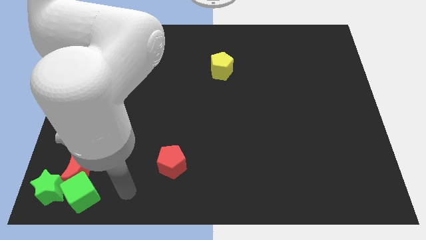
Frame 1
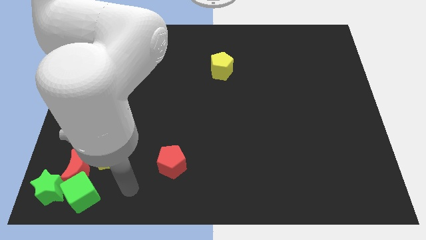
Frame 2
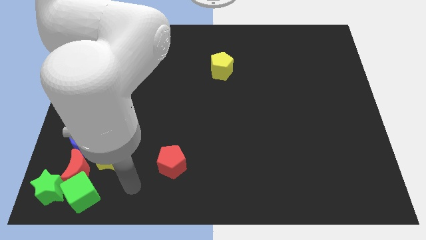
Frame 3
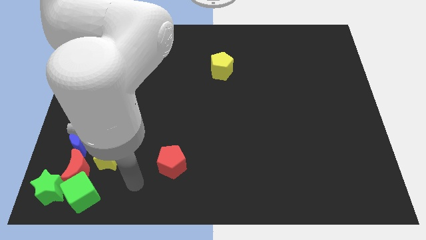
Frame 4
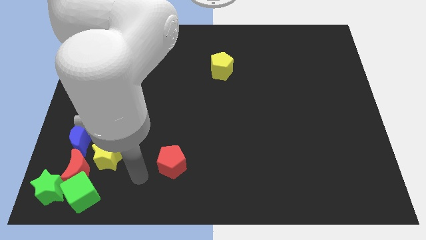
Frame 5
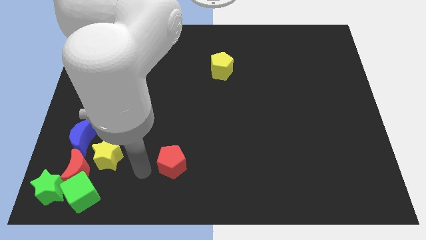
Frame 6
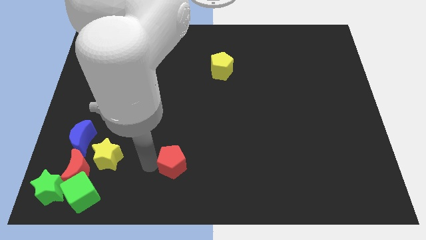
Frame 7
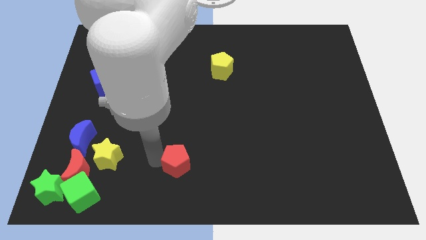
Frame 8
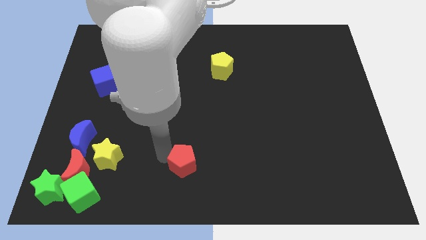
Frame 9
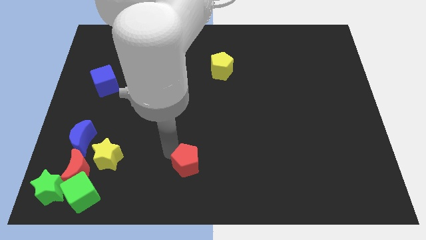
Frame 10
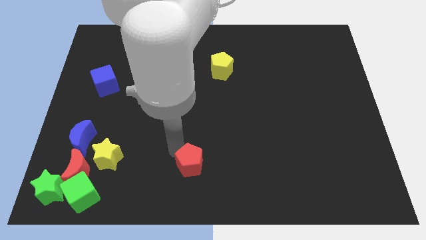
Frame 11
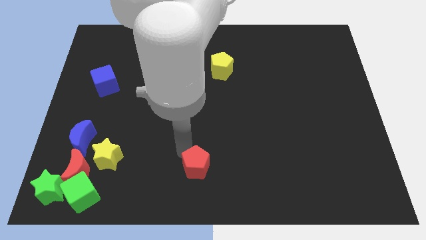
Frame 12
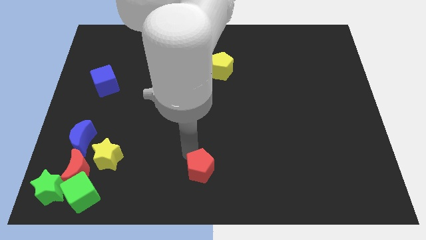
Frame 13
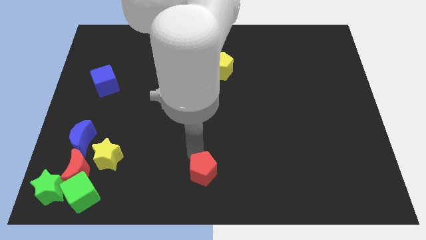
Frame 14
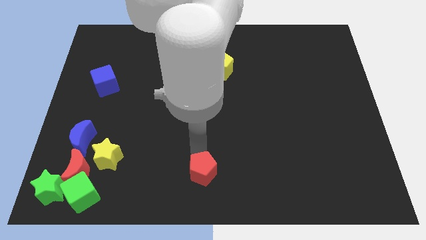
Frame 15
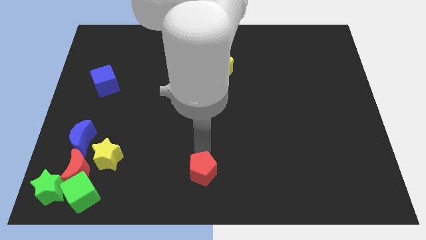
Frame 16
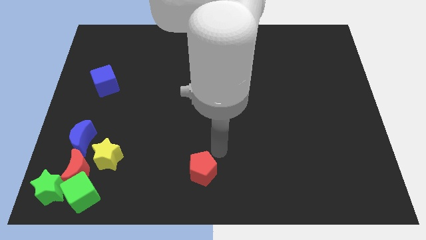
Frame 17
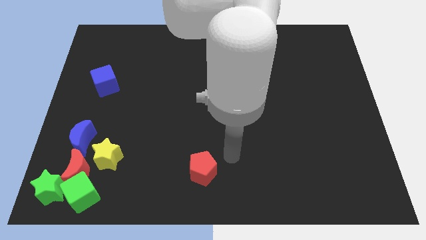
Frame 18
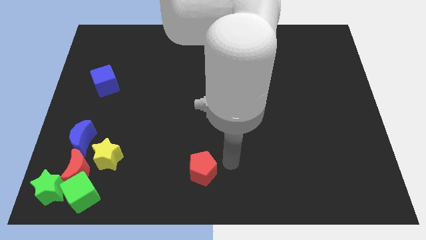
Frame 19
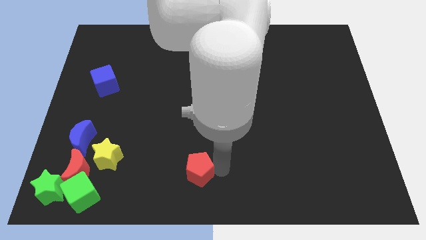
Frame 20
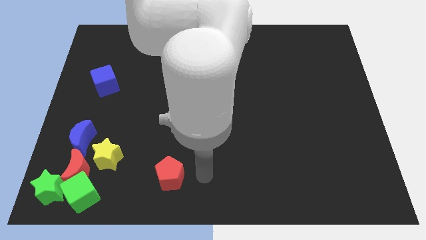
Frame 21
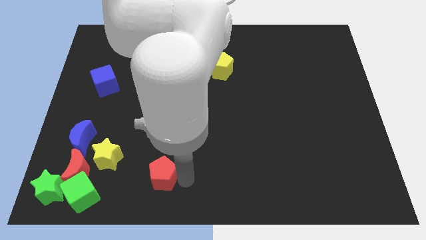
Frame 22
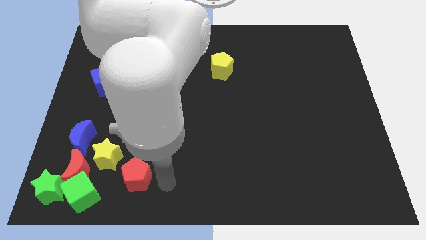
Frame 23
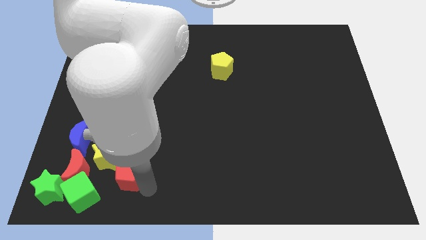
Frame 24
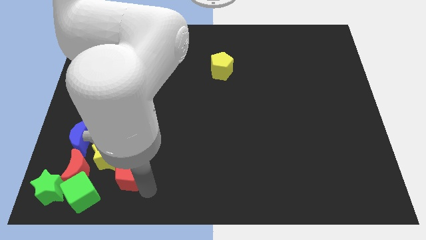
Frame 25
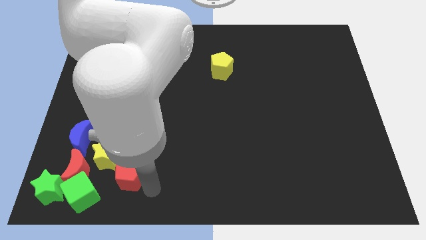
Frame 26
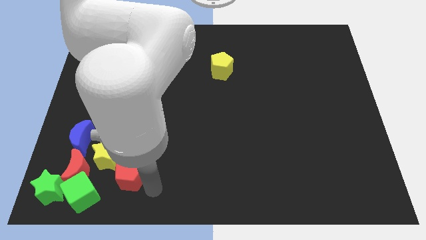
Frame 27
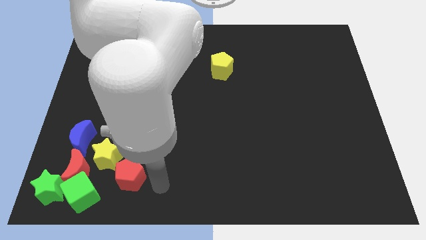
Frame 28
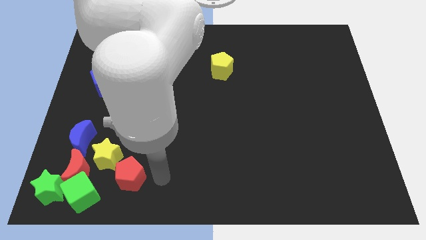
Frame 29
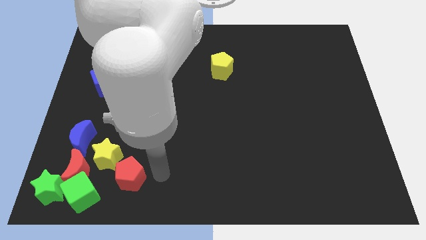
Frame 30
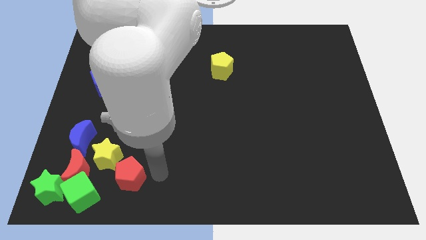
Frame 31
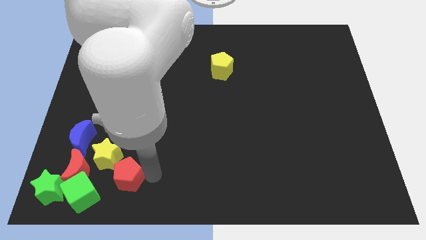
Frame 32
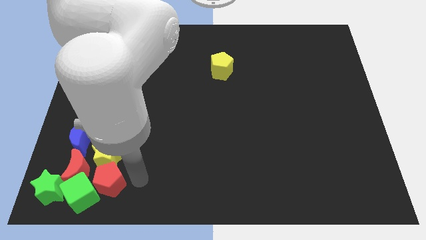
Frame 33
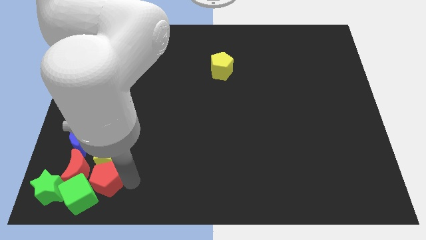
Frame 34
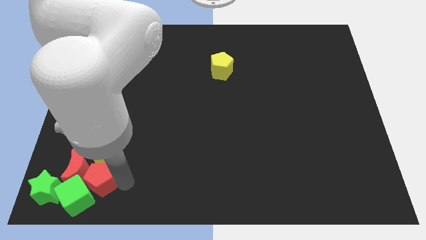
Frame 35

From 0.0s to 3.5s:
slide the red pentagon to the bottom side of the yellow star

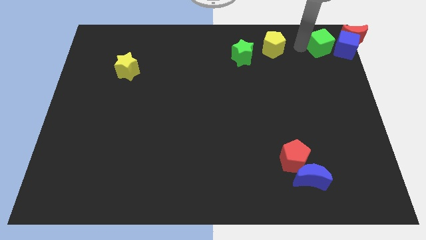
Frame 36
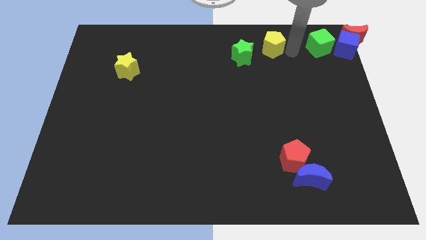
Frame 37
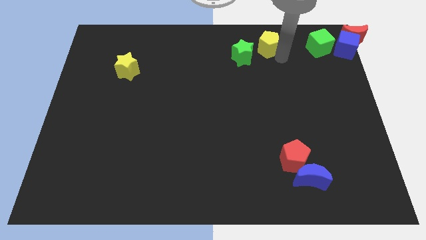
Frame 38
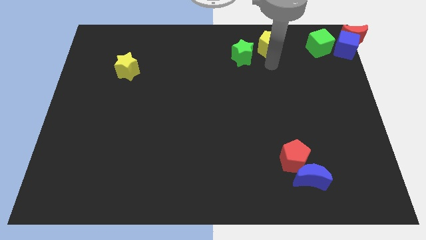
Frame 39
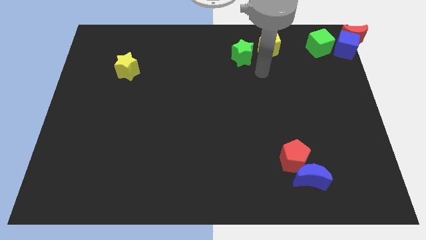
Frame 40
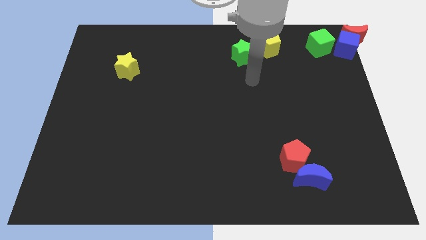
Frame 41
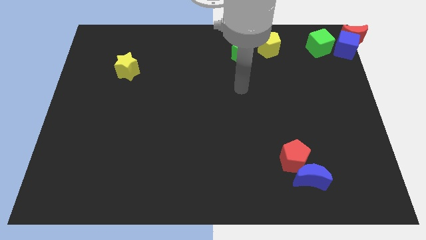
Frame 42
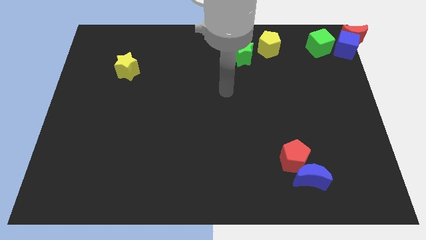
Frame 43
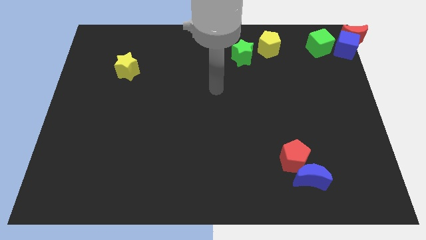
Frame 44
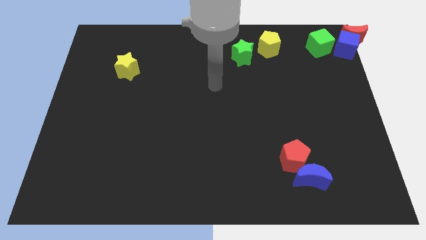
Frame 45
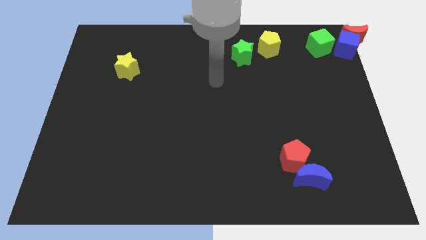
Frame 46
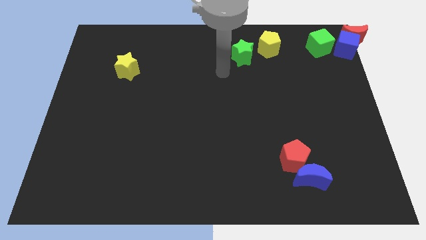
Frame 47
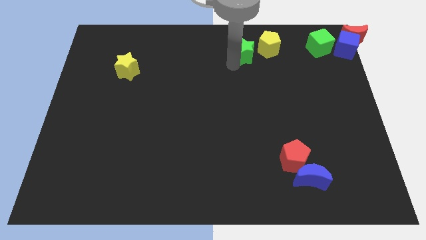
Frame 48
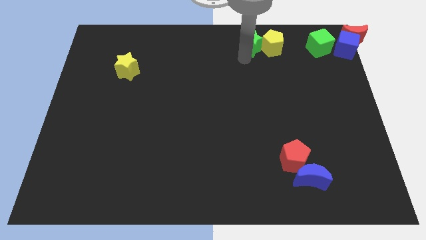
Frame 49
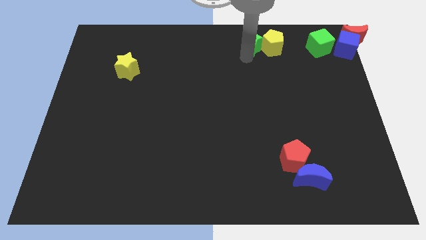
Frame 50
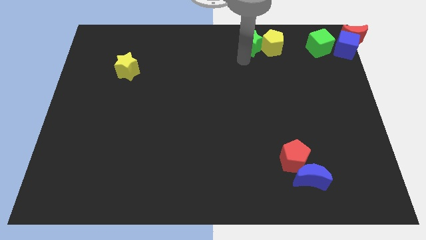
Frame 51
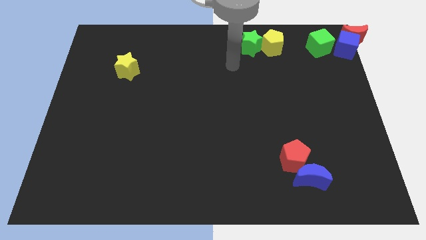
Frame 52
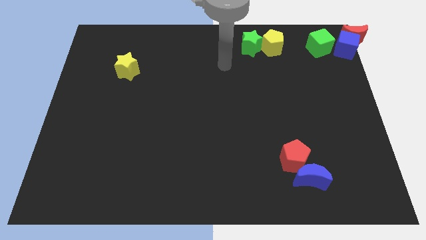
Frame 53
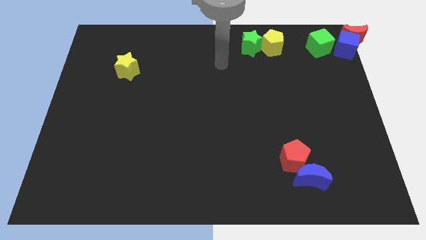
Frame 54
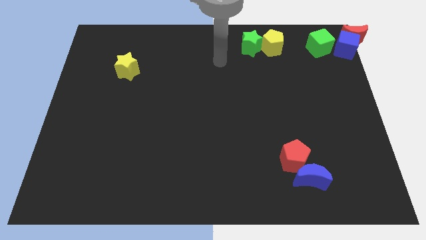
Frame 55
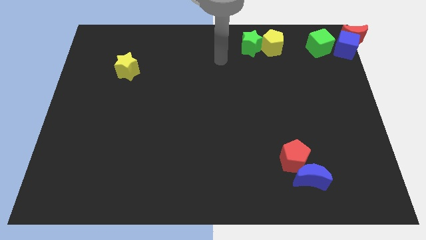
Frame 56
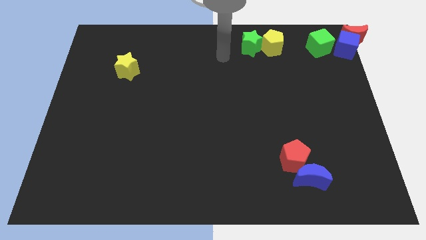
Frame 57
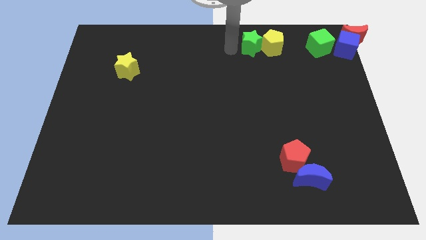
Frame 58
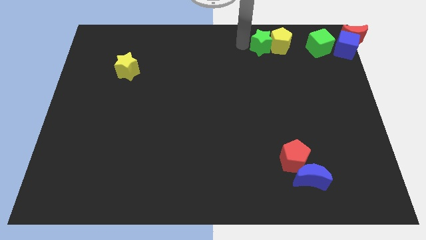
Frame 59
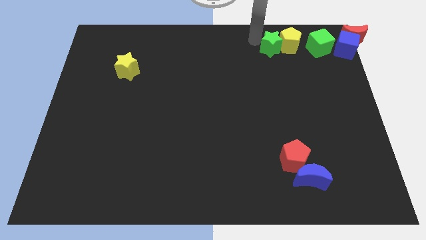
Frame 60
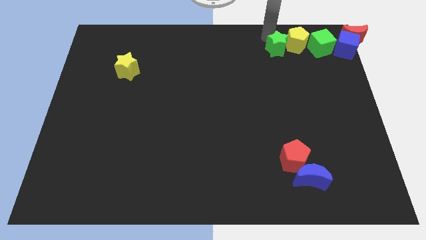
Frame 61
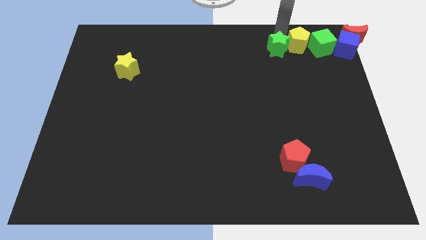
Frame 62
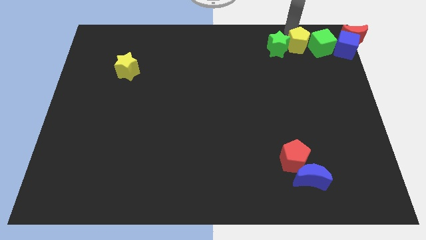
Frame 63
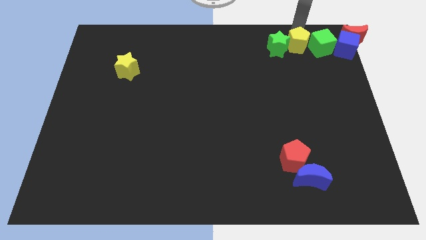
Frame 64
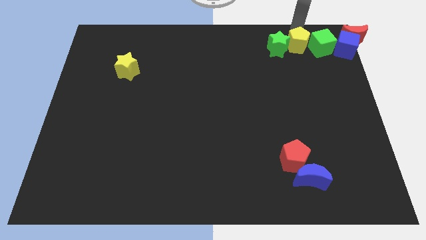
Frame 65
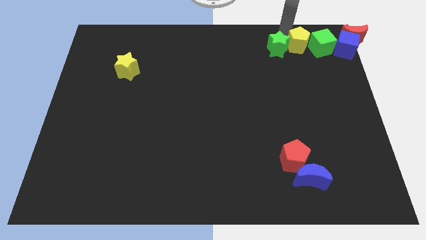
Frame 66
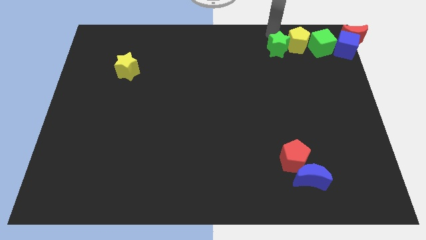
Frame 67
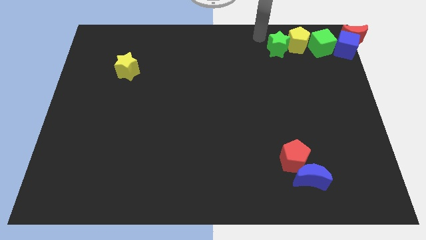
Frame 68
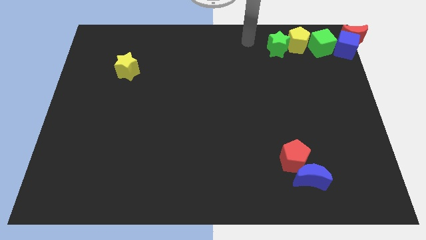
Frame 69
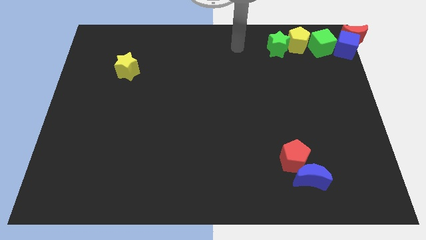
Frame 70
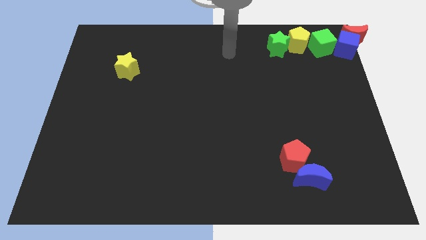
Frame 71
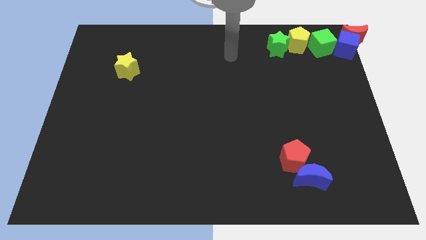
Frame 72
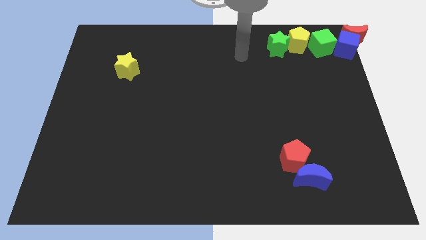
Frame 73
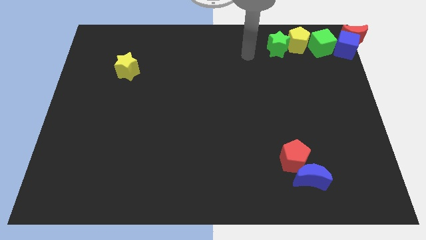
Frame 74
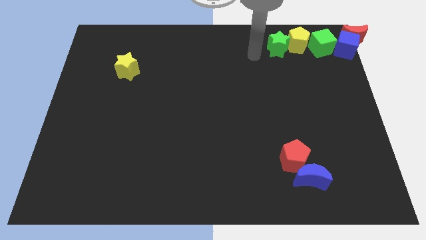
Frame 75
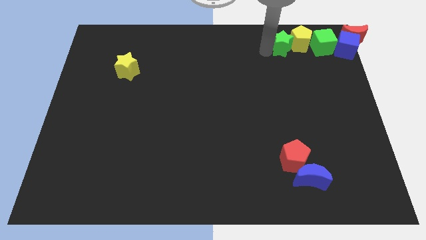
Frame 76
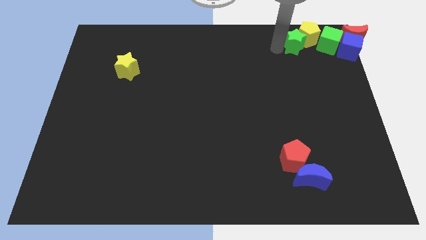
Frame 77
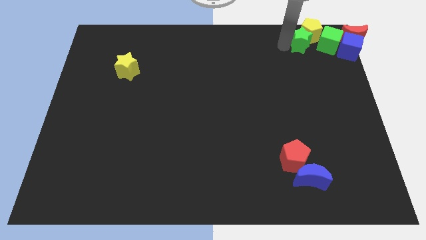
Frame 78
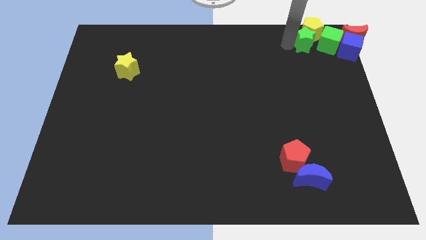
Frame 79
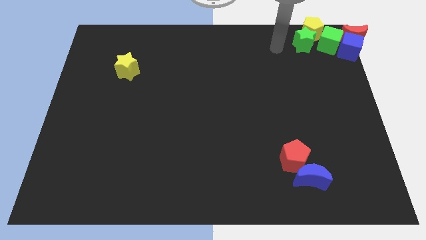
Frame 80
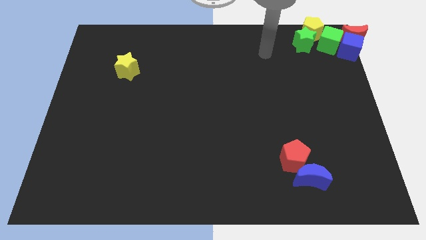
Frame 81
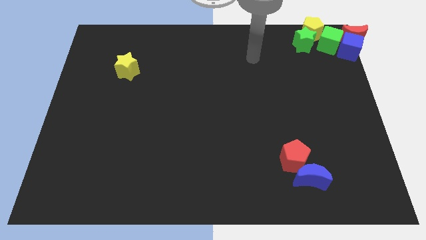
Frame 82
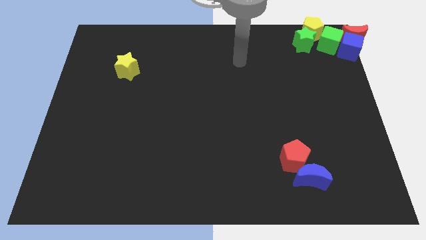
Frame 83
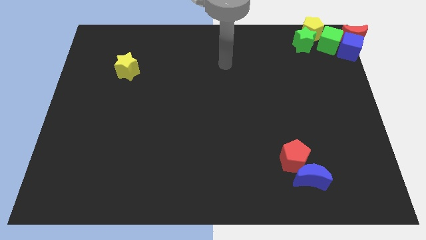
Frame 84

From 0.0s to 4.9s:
move the green star below the yellow pentagon

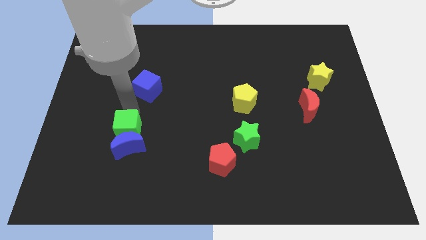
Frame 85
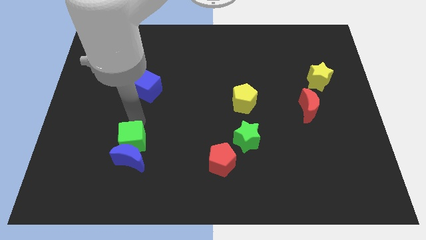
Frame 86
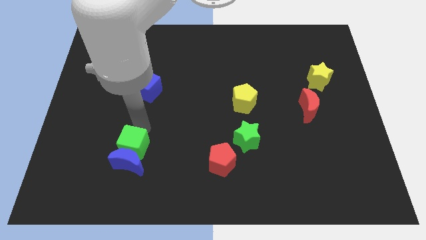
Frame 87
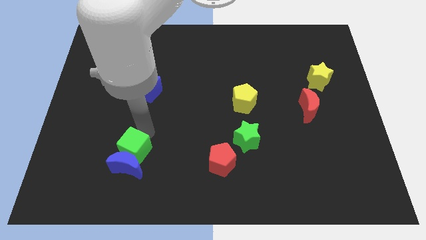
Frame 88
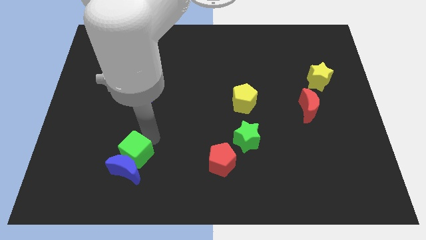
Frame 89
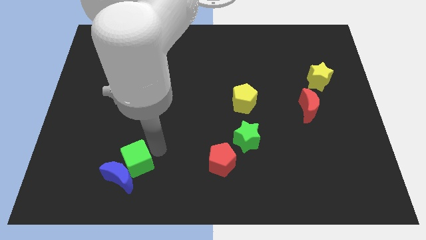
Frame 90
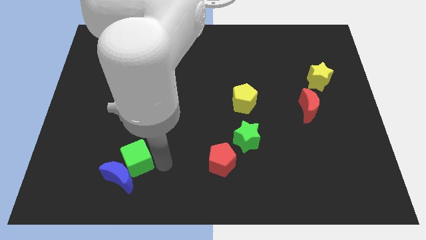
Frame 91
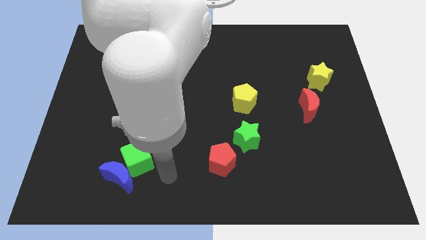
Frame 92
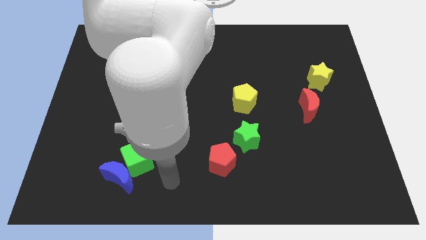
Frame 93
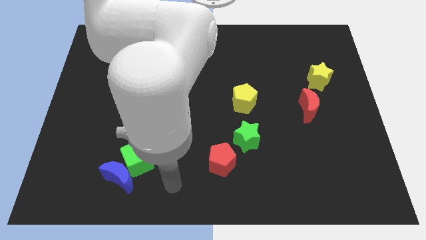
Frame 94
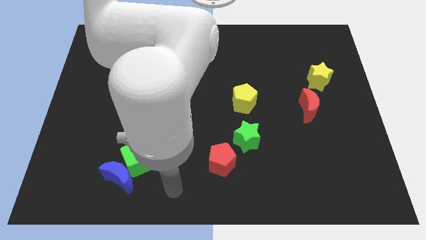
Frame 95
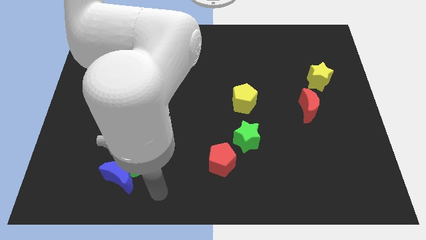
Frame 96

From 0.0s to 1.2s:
push the green cube along with the blue crescent
